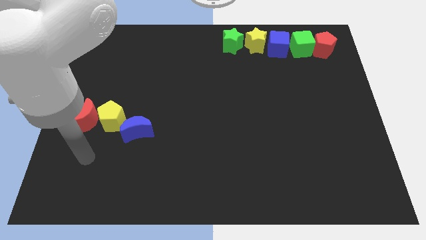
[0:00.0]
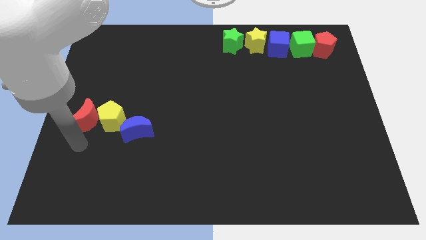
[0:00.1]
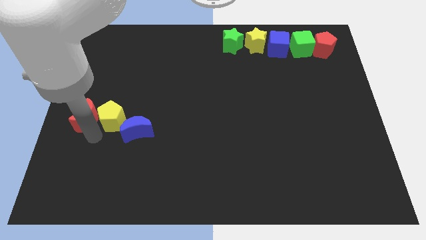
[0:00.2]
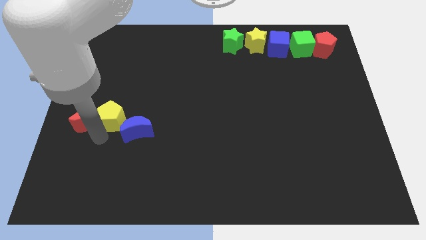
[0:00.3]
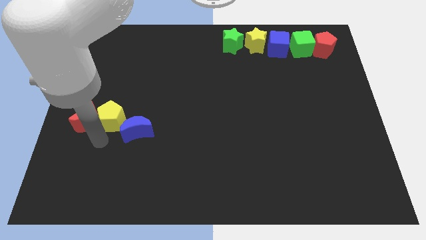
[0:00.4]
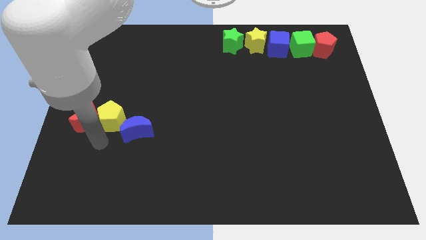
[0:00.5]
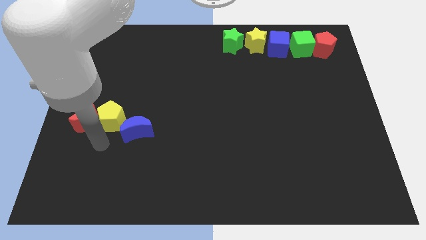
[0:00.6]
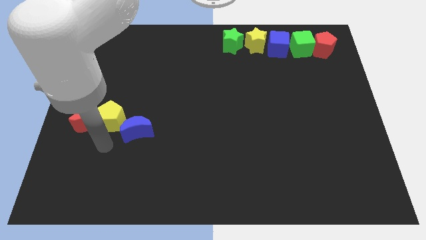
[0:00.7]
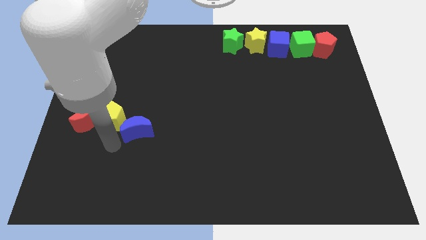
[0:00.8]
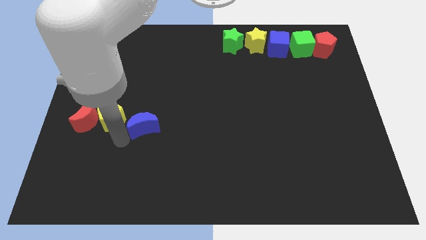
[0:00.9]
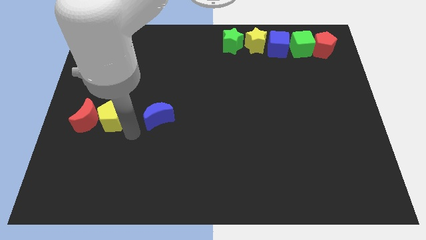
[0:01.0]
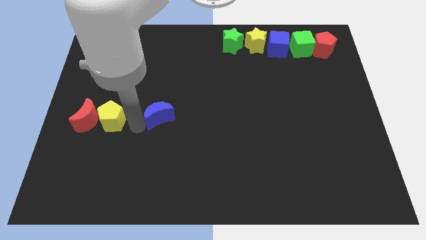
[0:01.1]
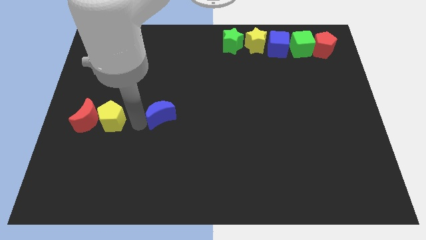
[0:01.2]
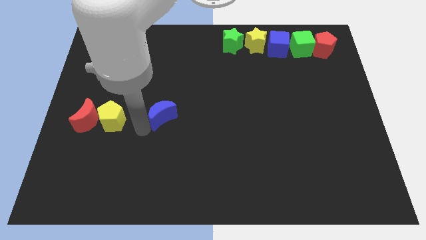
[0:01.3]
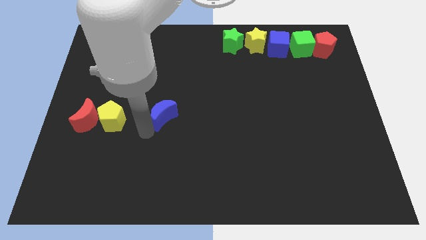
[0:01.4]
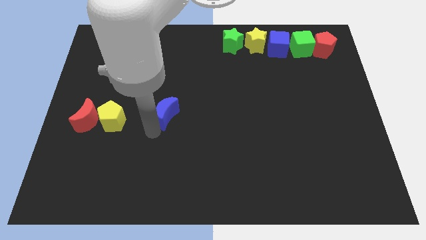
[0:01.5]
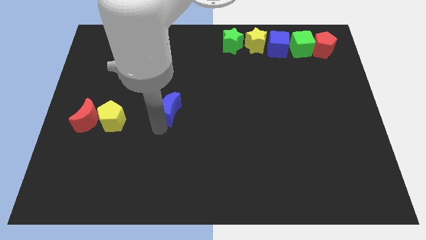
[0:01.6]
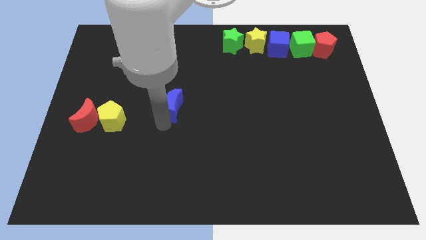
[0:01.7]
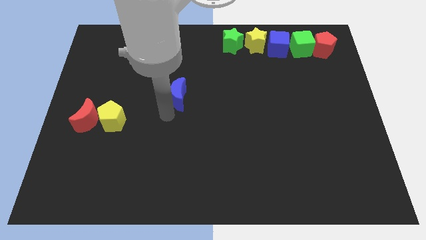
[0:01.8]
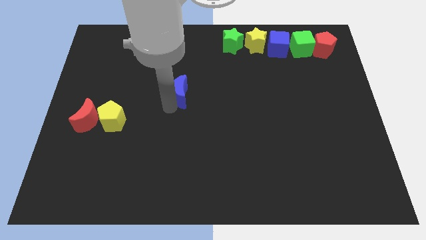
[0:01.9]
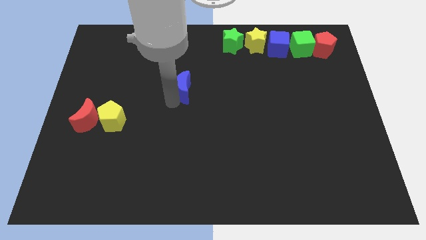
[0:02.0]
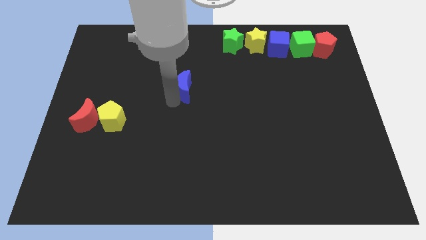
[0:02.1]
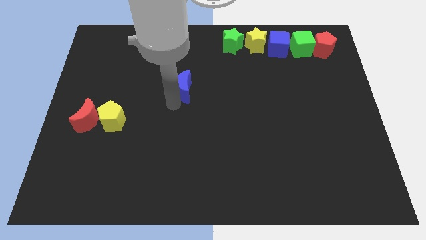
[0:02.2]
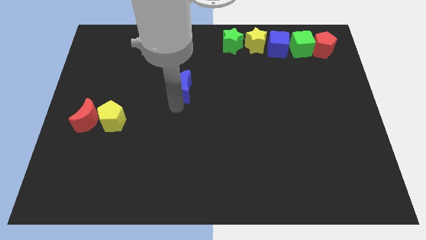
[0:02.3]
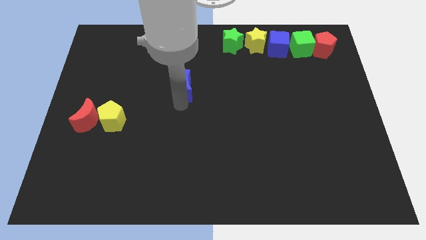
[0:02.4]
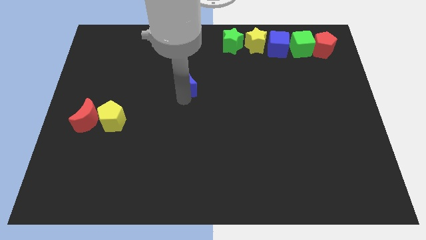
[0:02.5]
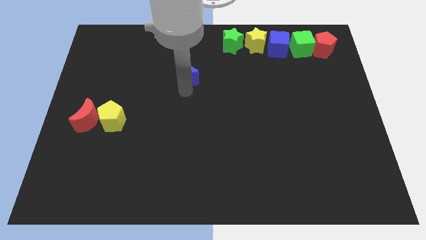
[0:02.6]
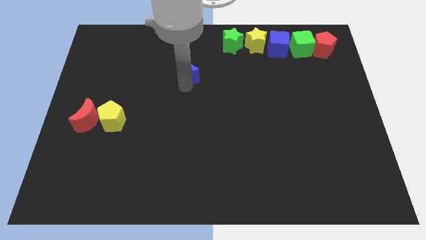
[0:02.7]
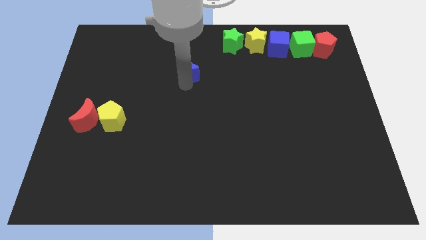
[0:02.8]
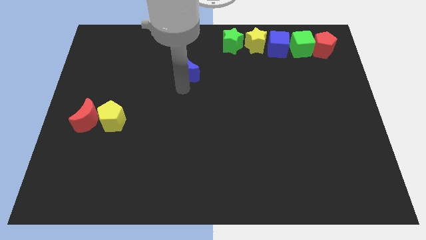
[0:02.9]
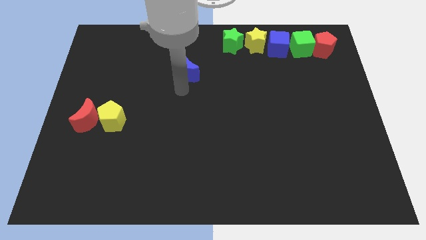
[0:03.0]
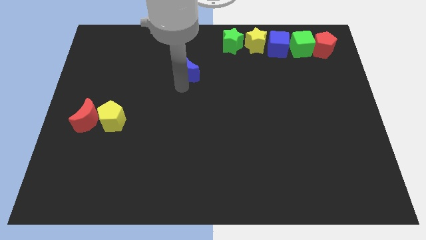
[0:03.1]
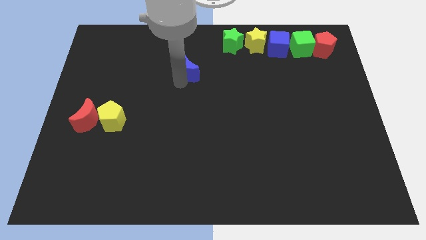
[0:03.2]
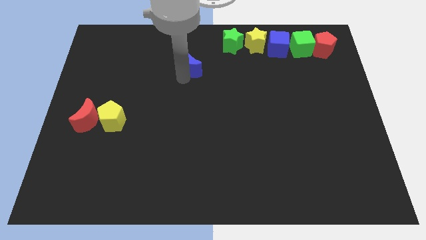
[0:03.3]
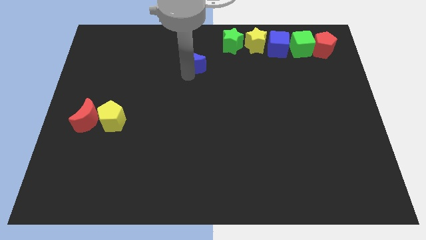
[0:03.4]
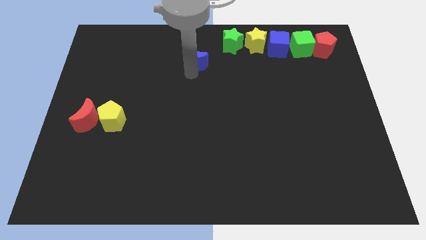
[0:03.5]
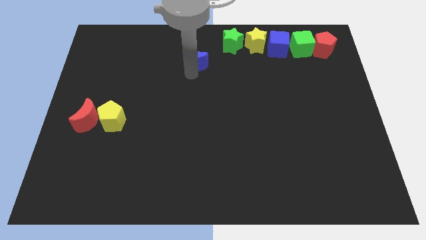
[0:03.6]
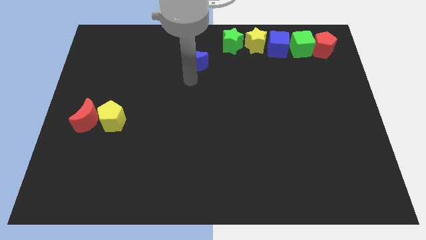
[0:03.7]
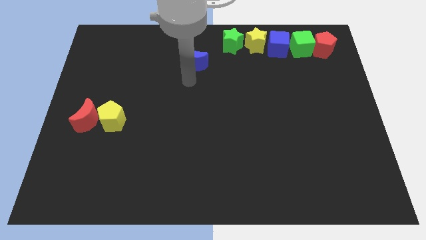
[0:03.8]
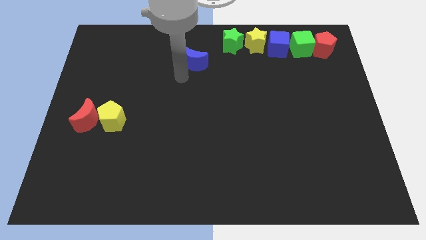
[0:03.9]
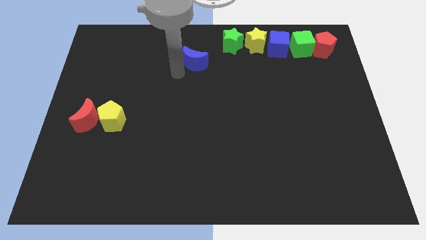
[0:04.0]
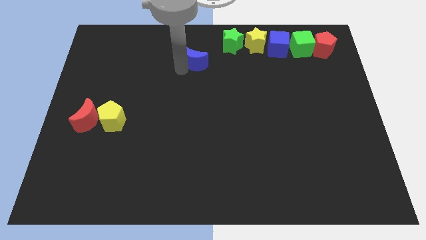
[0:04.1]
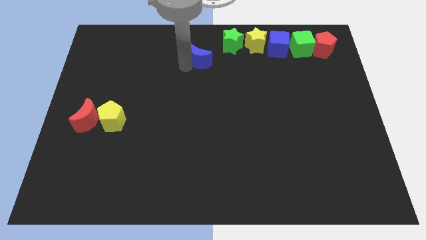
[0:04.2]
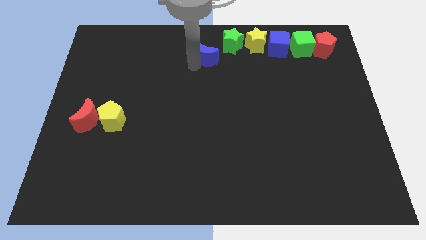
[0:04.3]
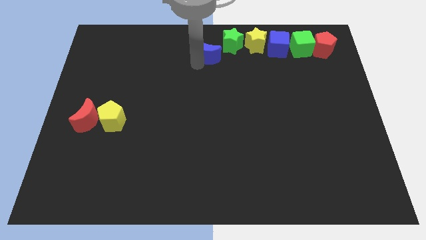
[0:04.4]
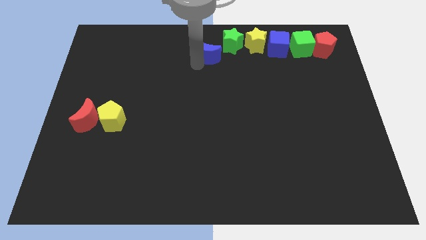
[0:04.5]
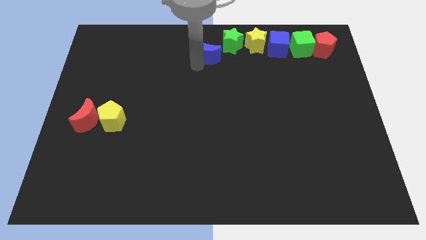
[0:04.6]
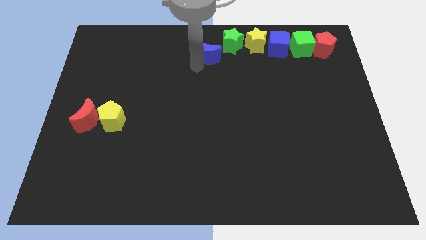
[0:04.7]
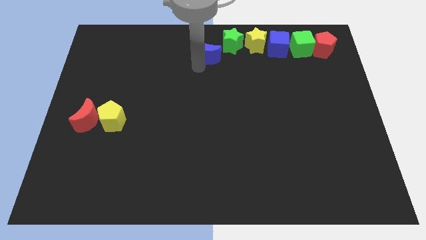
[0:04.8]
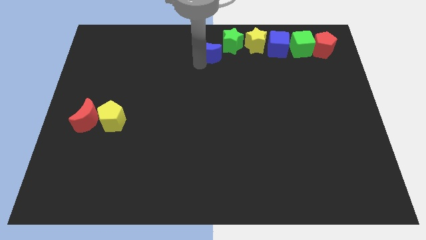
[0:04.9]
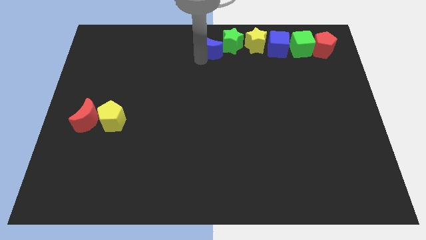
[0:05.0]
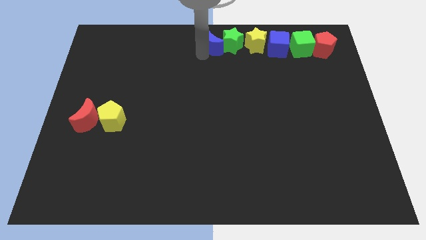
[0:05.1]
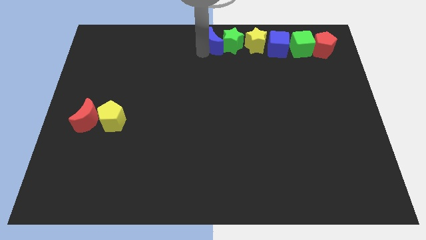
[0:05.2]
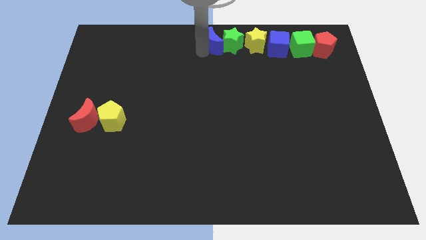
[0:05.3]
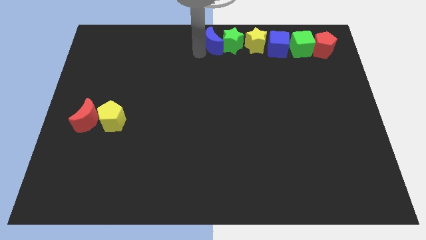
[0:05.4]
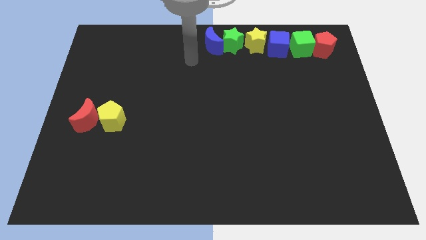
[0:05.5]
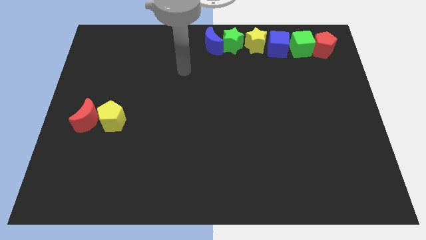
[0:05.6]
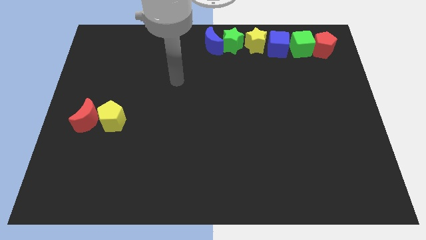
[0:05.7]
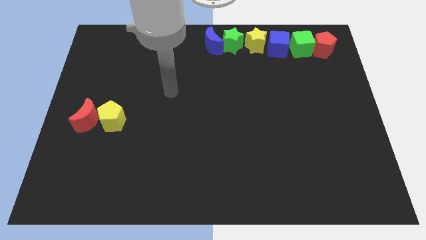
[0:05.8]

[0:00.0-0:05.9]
drag the blue moon to the left of the green star

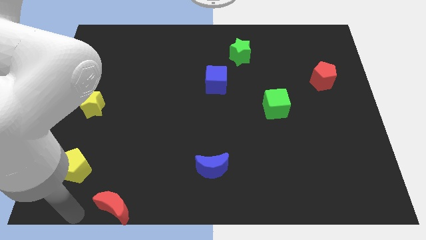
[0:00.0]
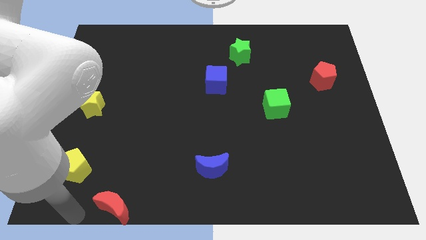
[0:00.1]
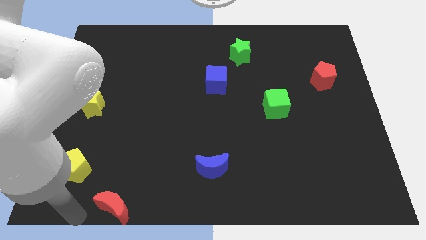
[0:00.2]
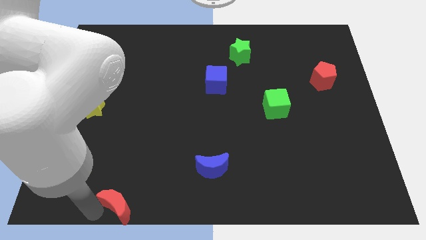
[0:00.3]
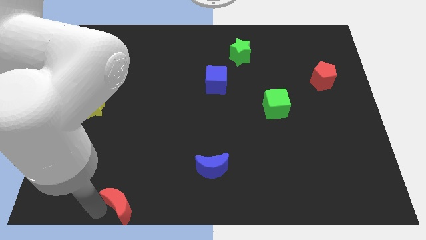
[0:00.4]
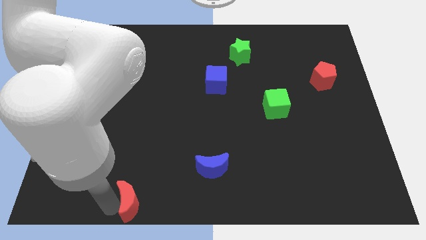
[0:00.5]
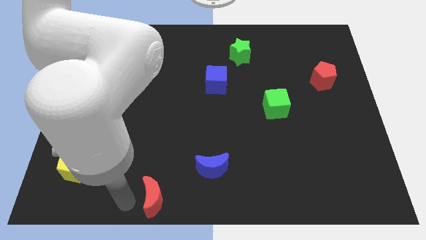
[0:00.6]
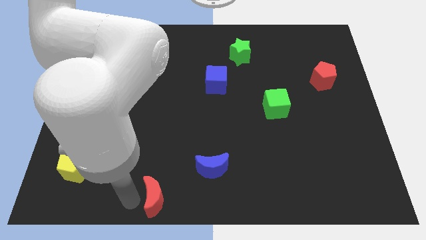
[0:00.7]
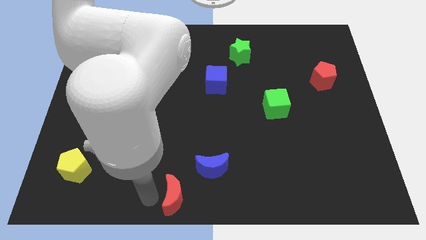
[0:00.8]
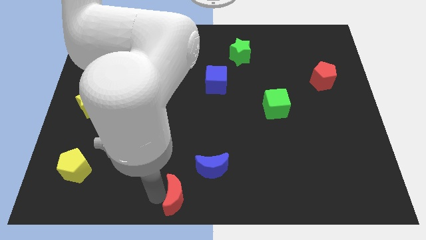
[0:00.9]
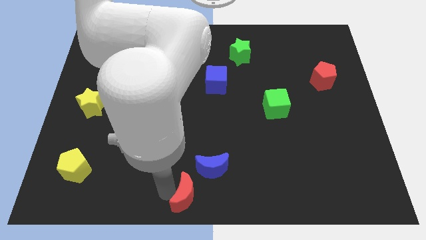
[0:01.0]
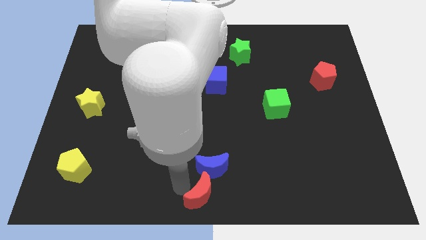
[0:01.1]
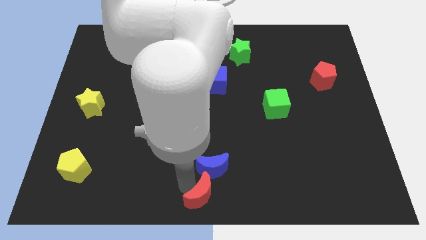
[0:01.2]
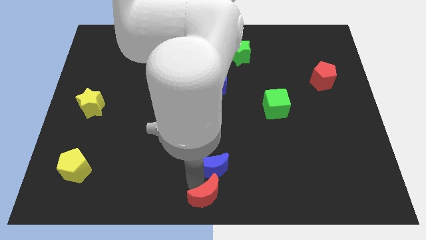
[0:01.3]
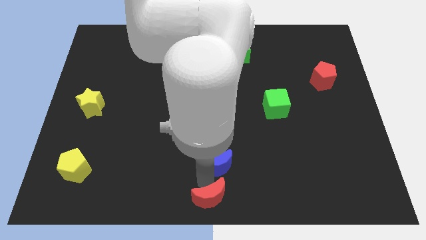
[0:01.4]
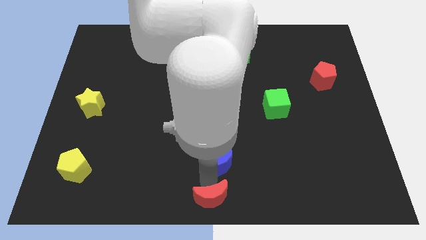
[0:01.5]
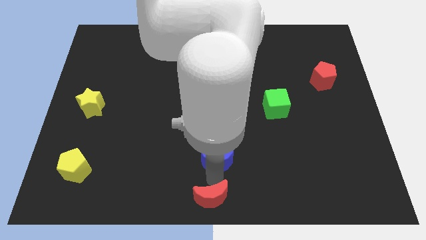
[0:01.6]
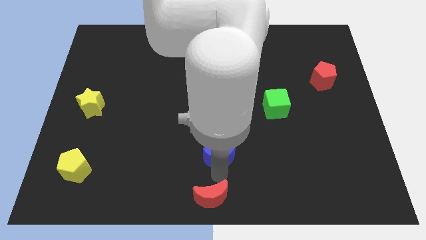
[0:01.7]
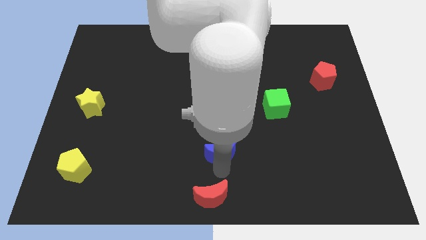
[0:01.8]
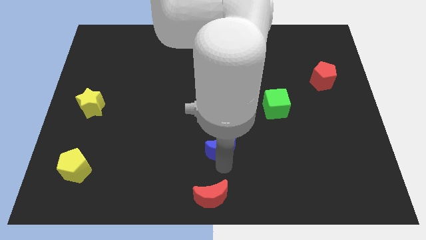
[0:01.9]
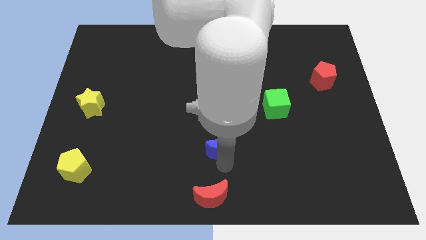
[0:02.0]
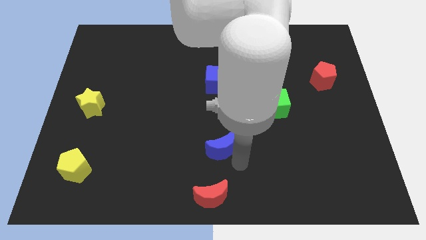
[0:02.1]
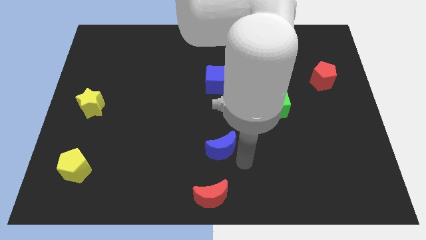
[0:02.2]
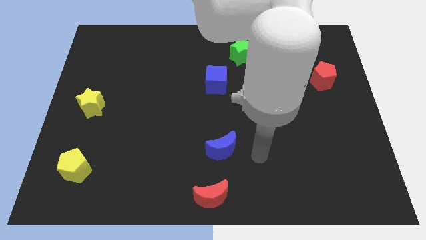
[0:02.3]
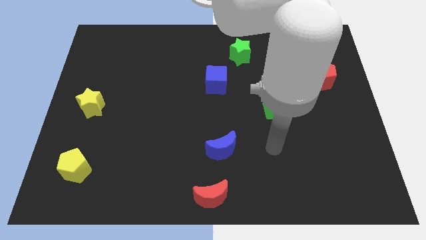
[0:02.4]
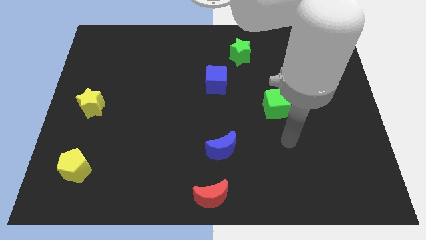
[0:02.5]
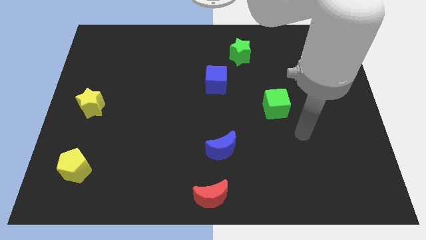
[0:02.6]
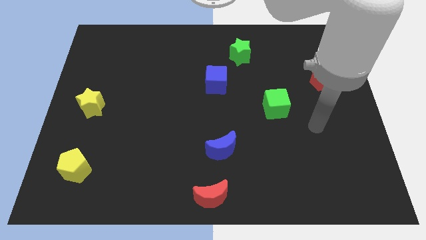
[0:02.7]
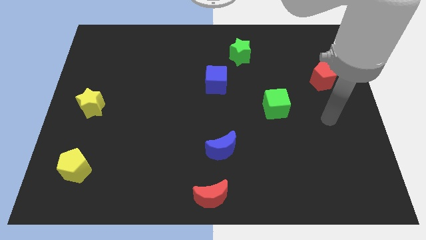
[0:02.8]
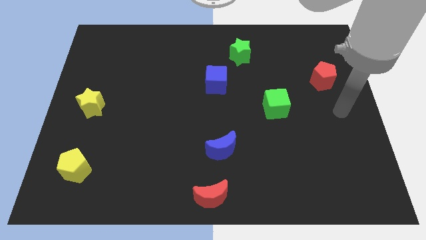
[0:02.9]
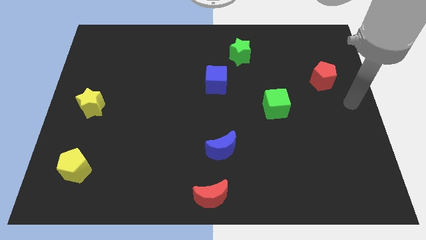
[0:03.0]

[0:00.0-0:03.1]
place the red crescent at the bottom center of the board
